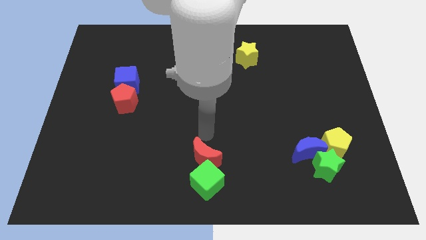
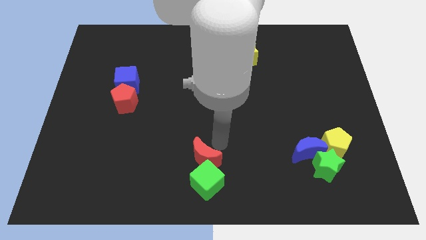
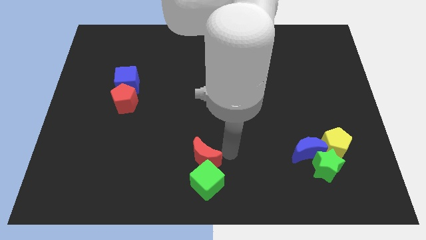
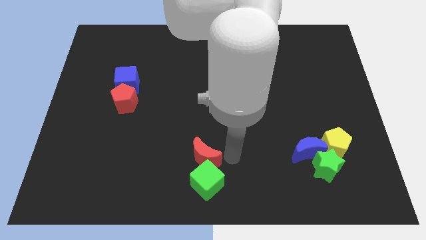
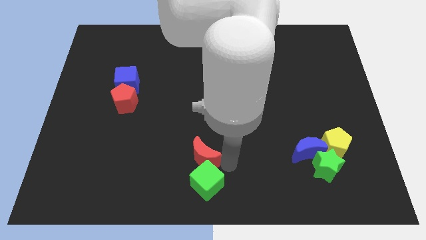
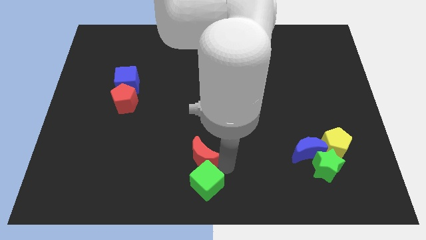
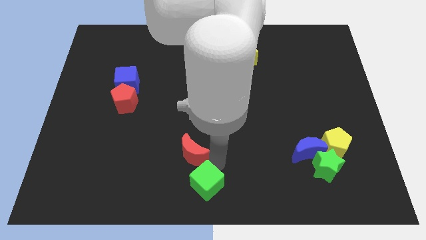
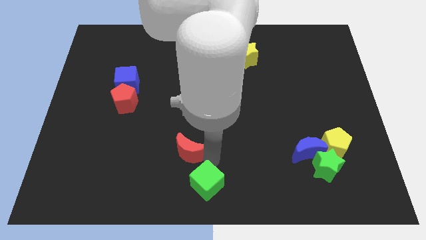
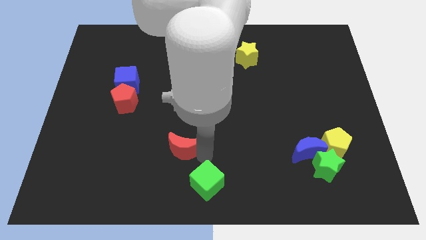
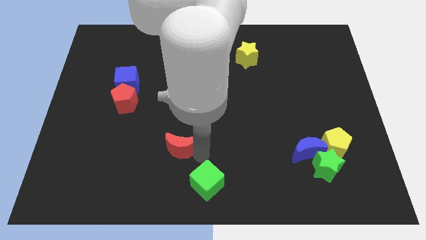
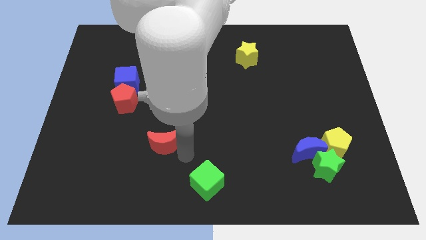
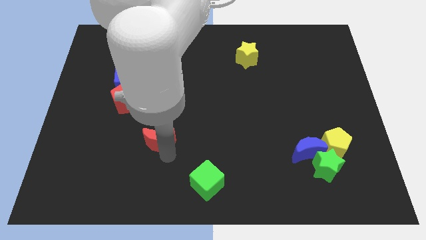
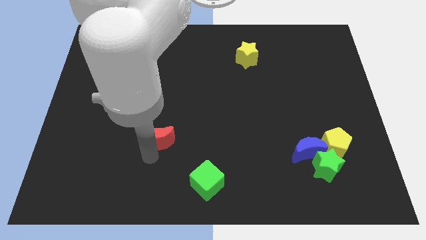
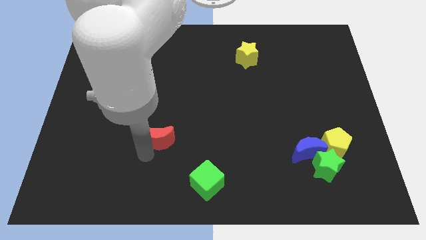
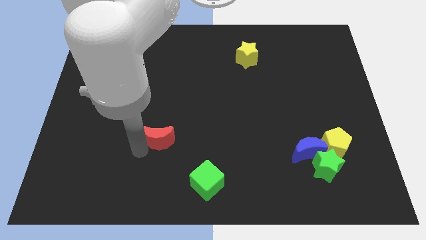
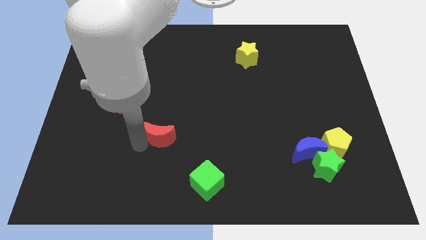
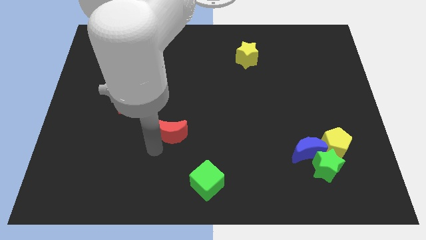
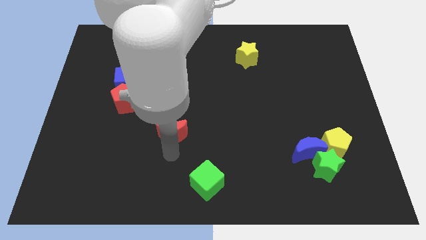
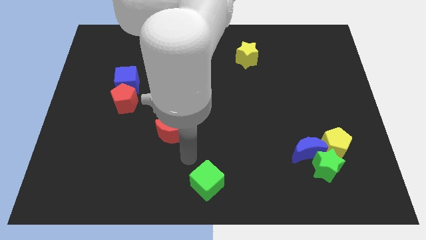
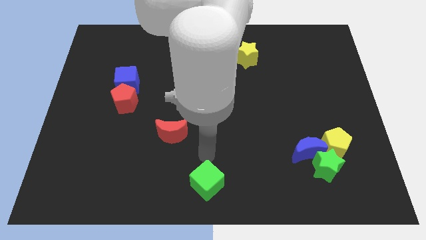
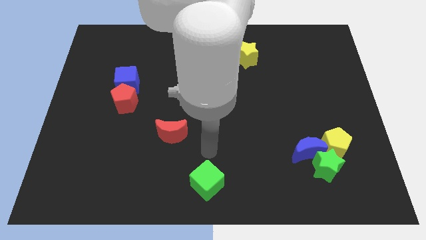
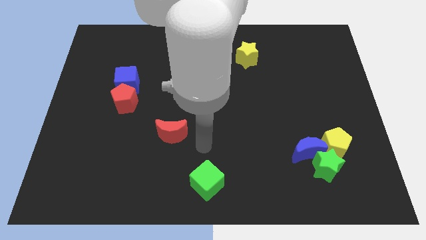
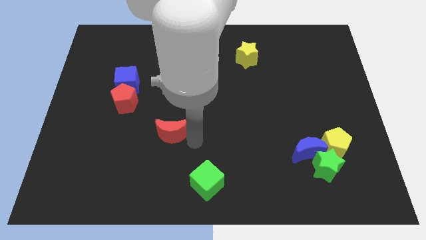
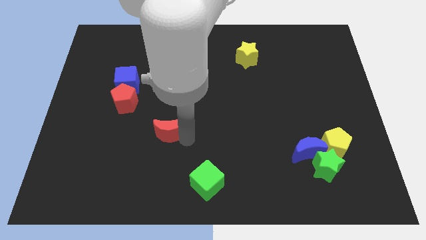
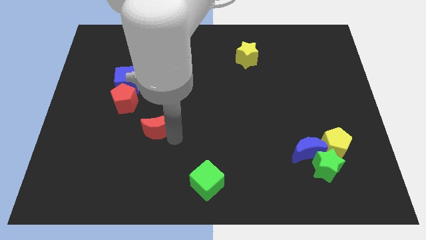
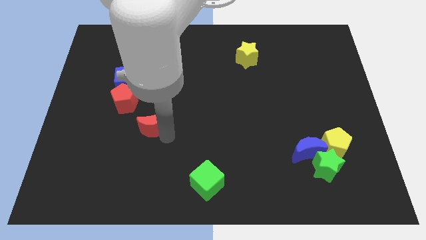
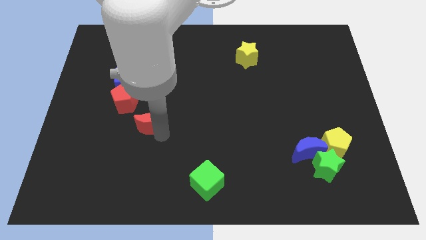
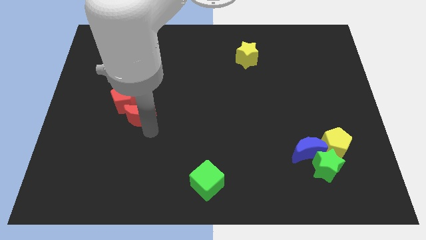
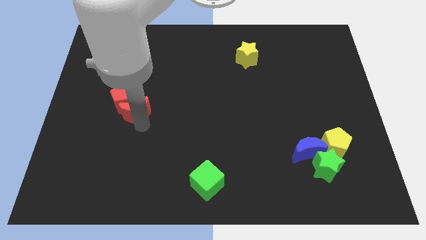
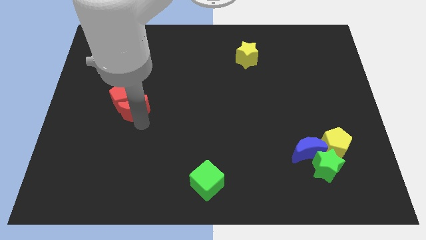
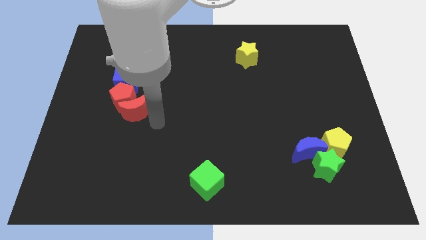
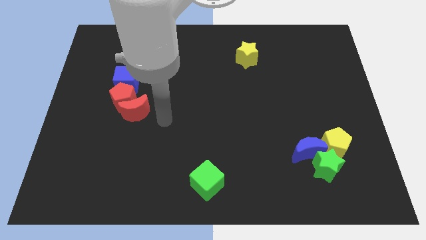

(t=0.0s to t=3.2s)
move the red crescent into the red pentagon

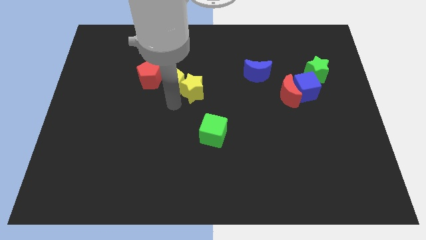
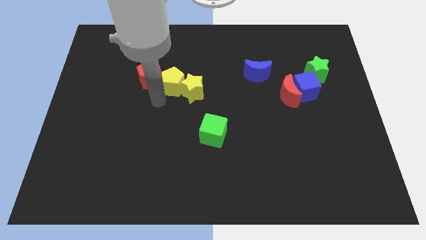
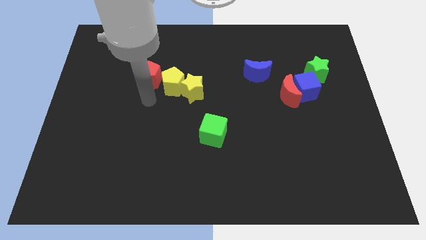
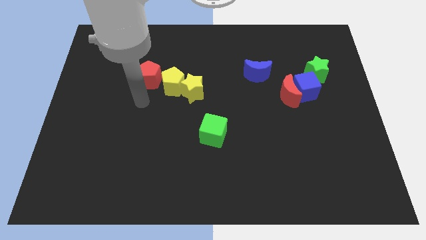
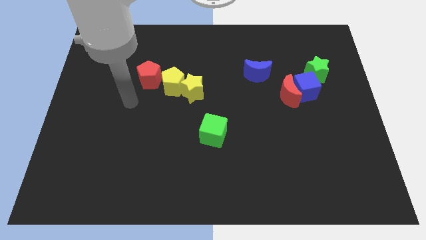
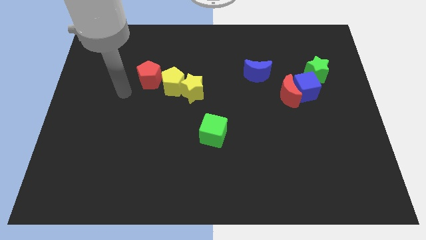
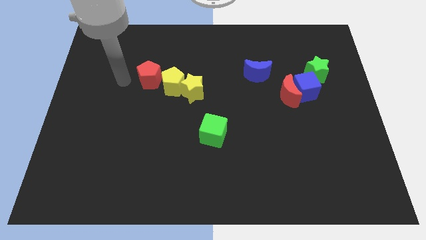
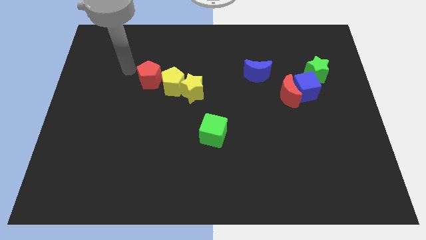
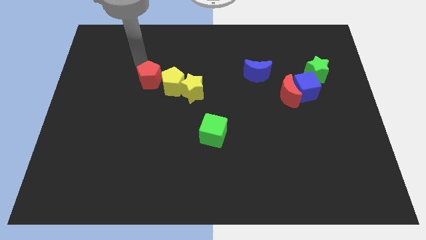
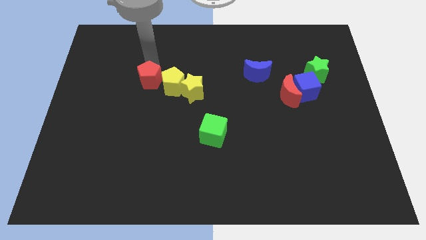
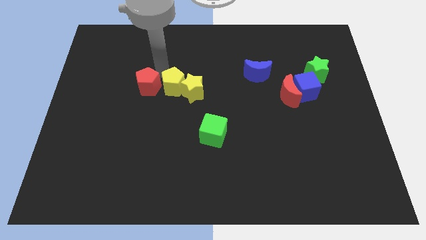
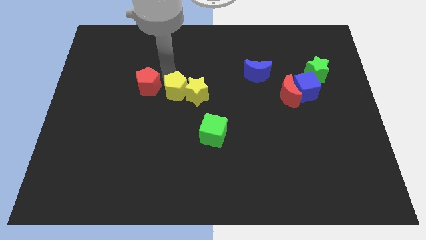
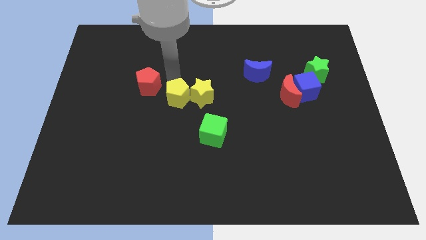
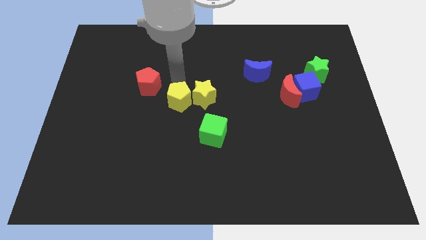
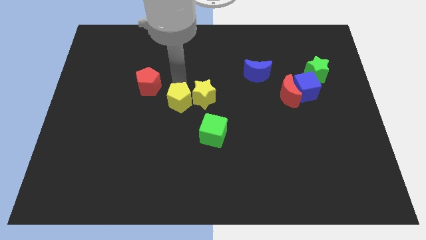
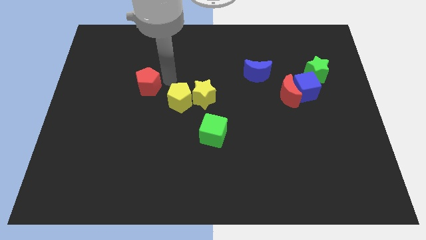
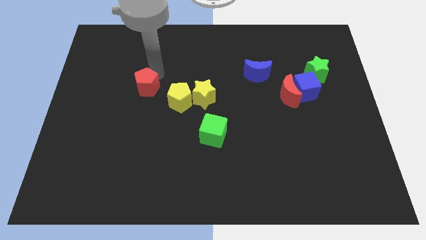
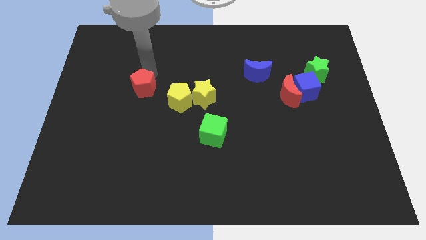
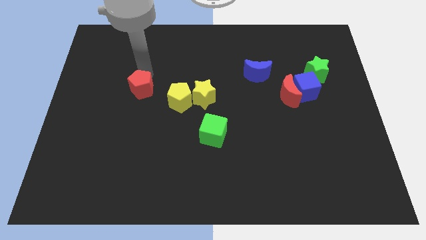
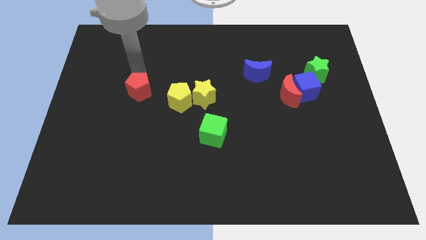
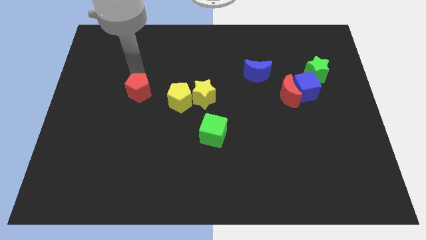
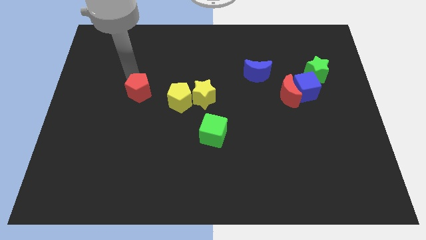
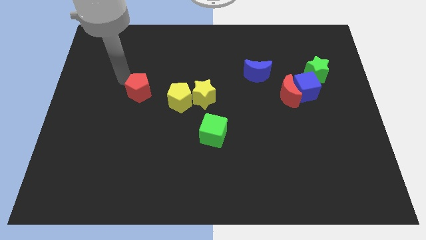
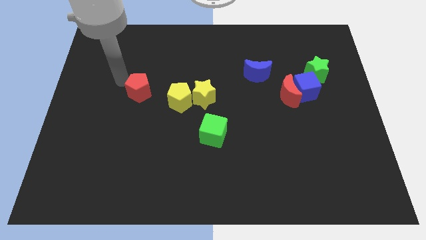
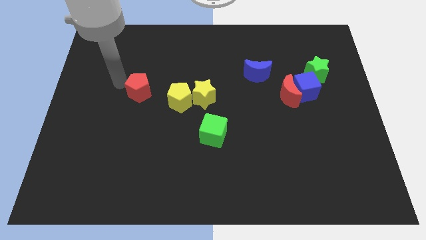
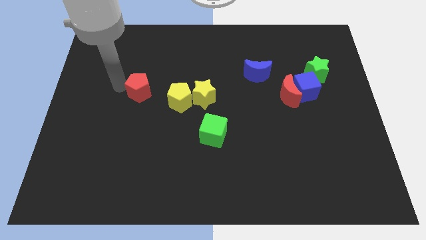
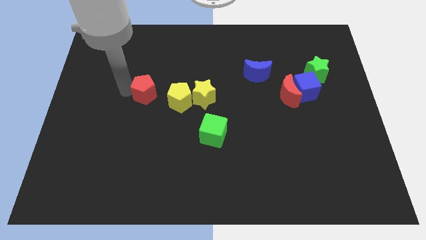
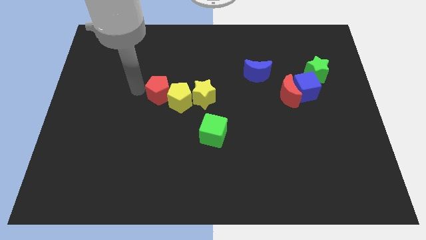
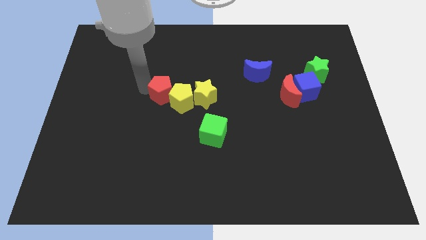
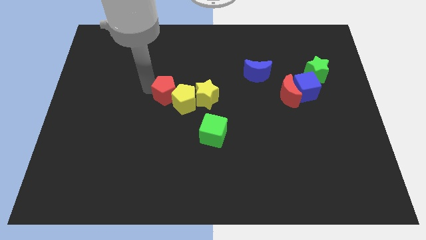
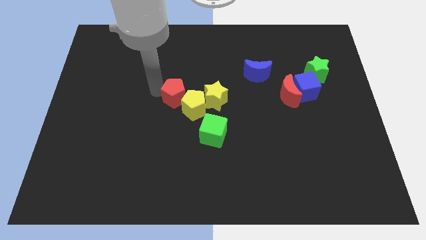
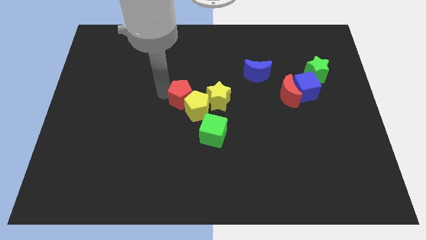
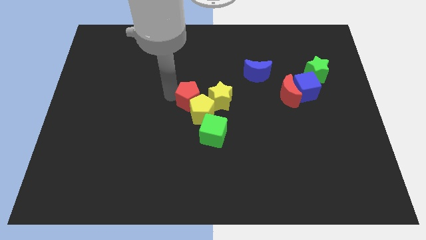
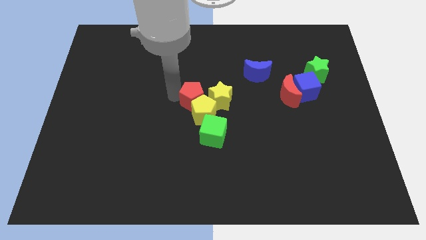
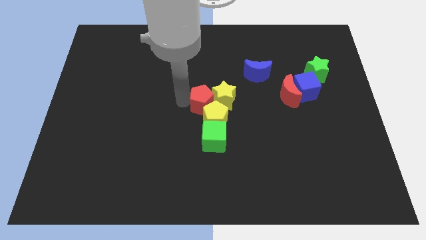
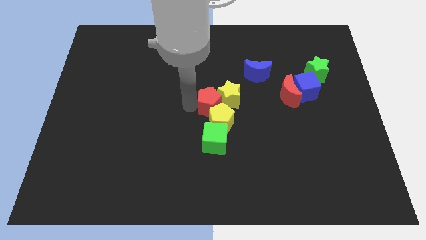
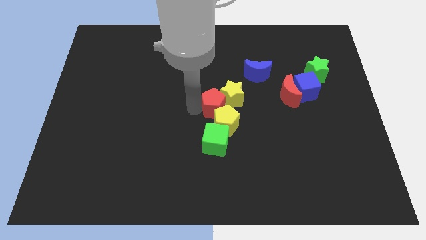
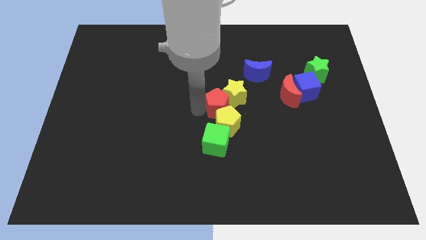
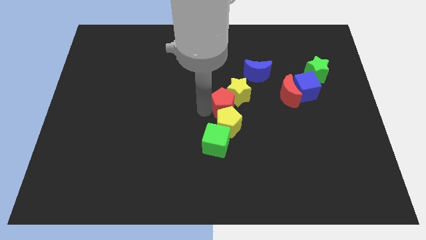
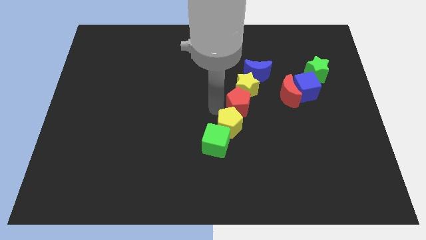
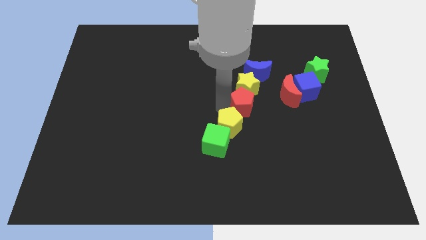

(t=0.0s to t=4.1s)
form a line with a red yellow pentagon yellow star green cube blue moon

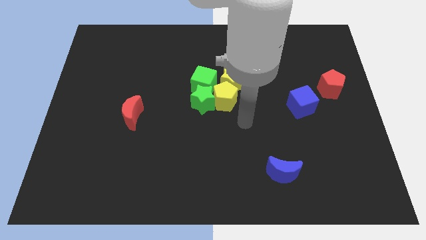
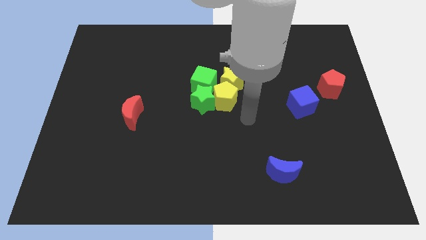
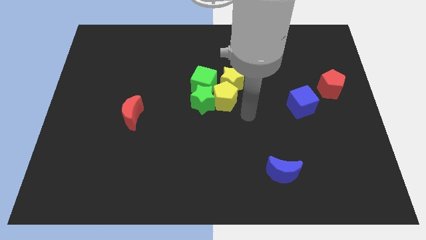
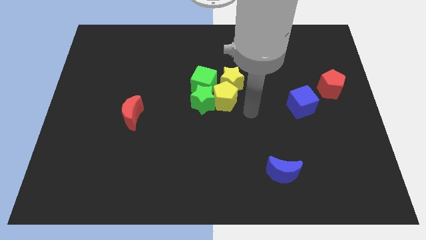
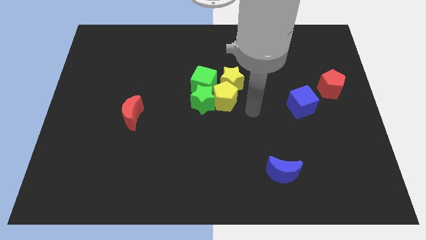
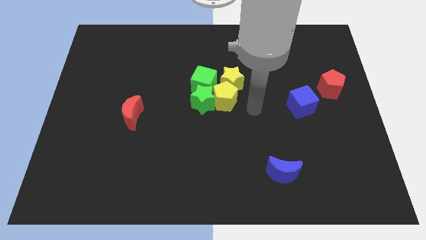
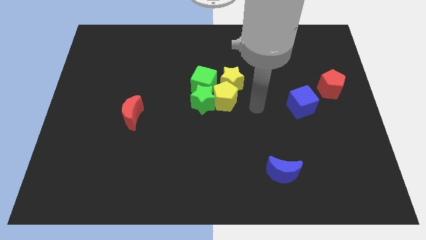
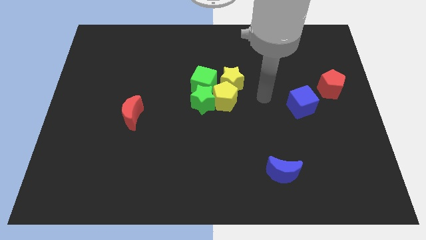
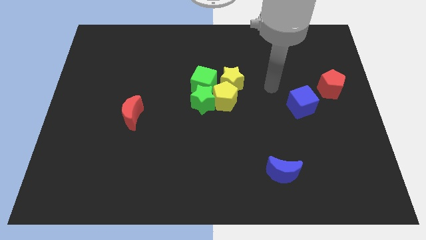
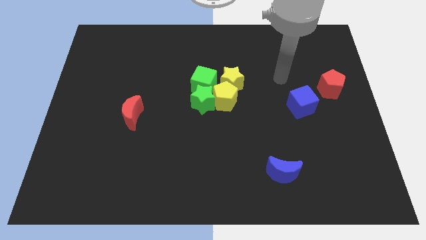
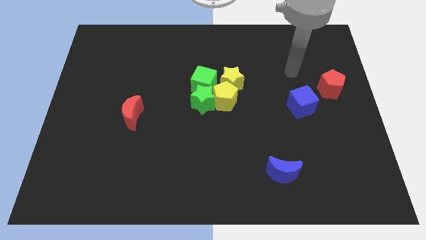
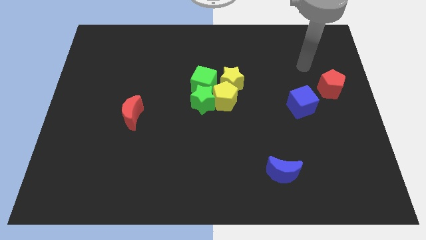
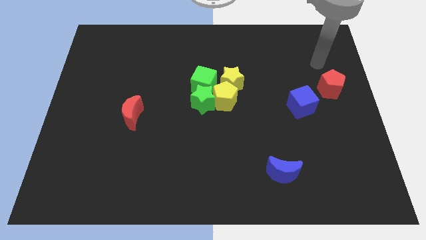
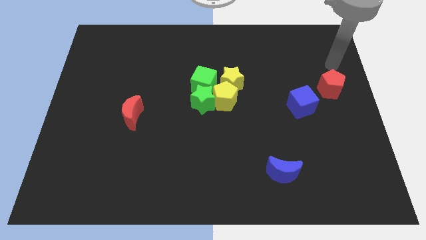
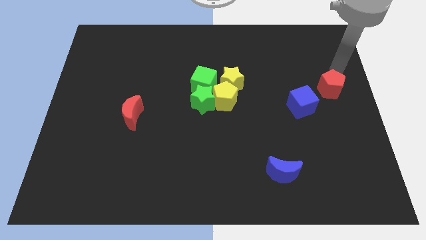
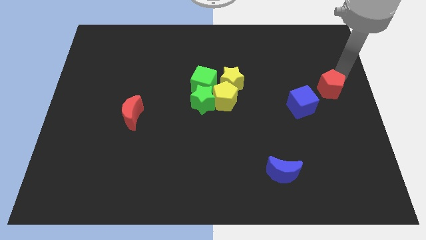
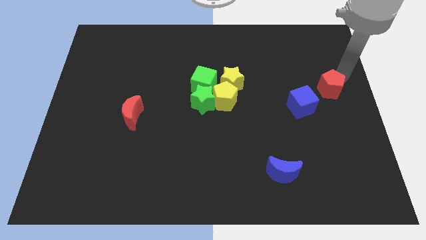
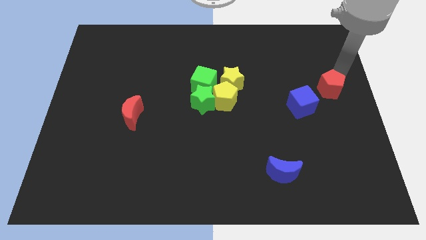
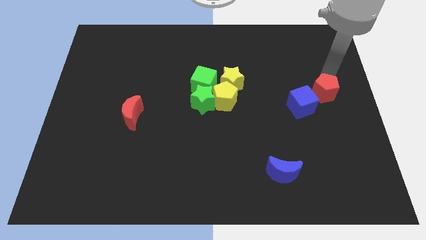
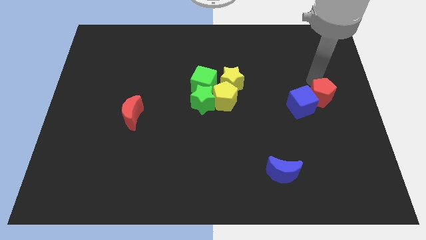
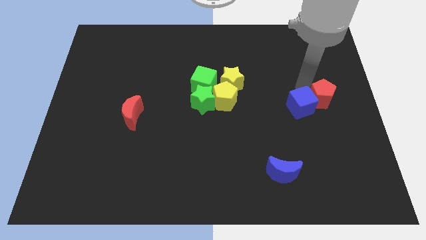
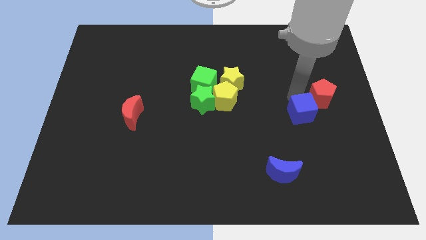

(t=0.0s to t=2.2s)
push the red pentagon into blue cube diagonal right
